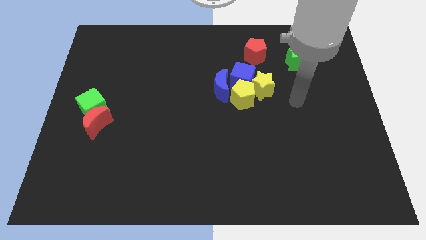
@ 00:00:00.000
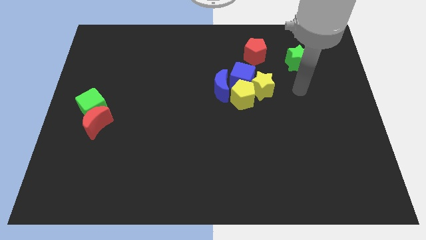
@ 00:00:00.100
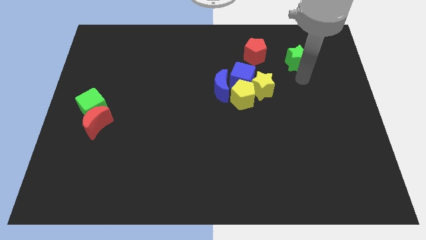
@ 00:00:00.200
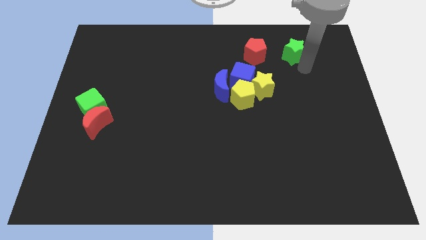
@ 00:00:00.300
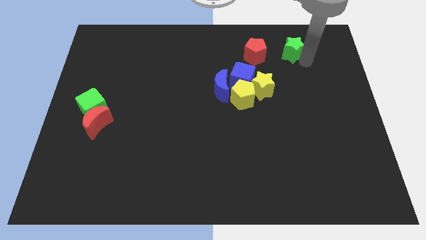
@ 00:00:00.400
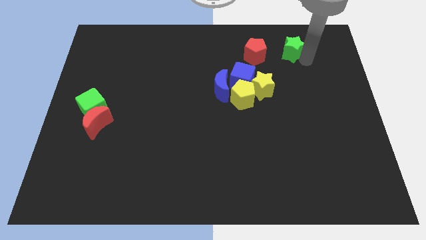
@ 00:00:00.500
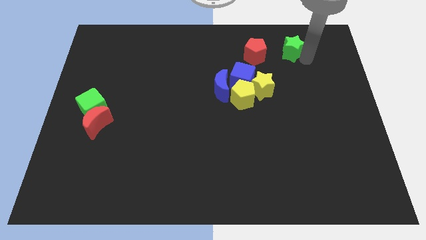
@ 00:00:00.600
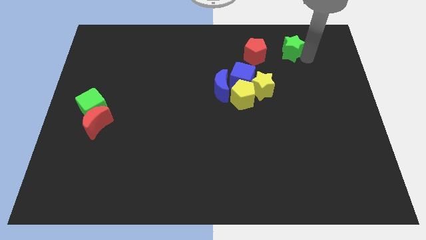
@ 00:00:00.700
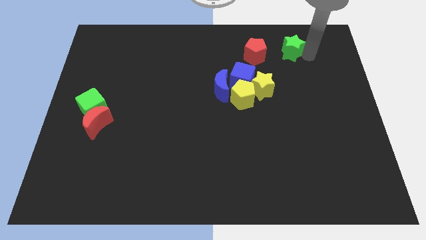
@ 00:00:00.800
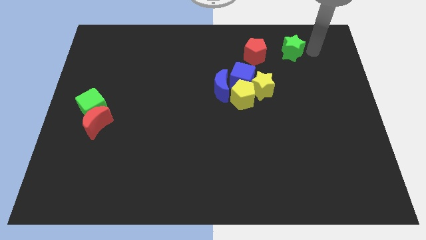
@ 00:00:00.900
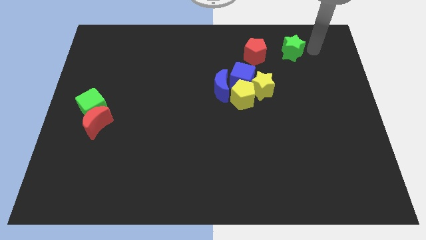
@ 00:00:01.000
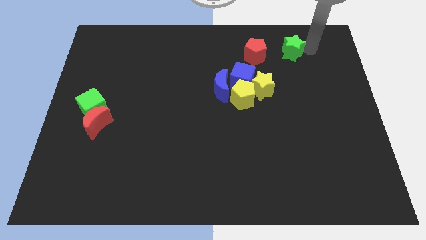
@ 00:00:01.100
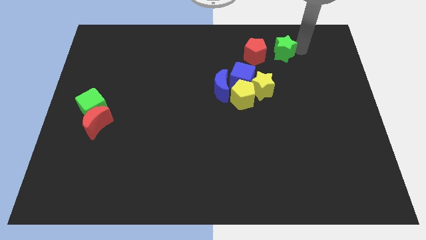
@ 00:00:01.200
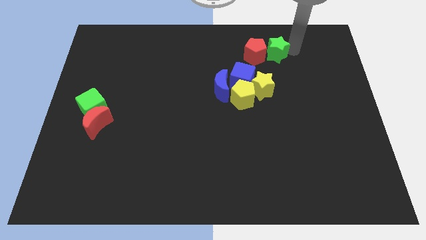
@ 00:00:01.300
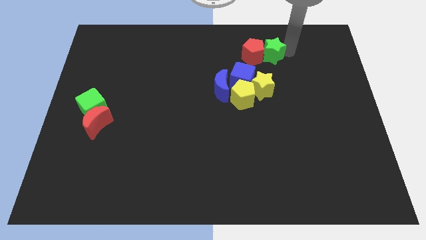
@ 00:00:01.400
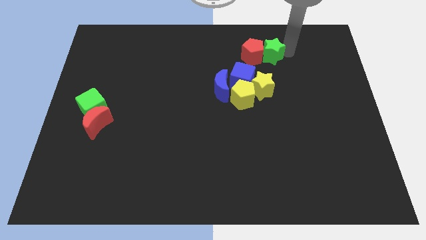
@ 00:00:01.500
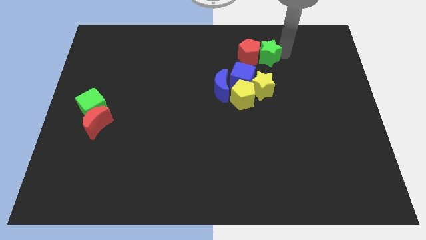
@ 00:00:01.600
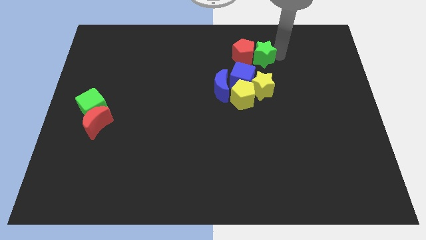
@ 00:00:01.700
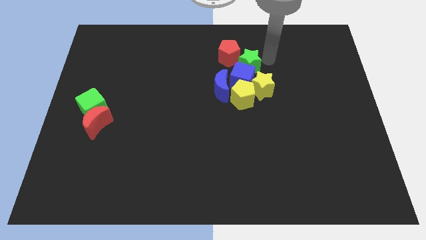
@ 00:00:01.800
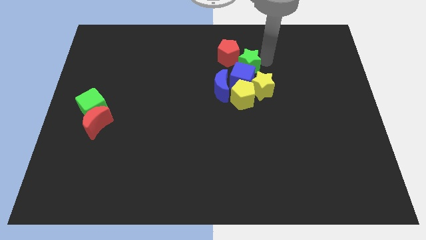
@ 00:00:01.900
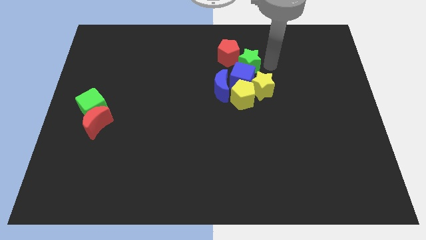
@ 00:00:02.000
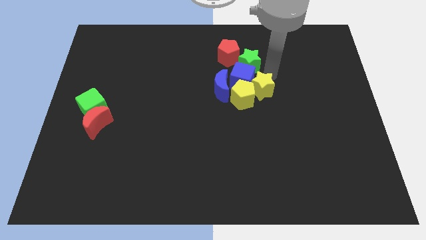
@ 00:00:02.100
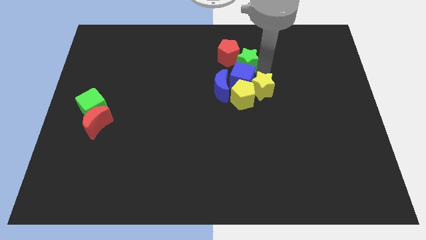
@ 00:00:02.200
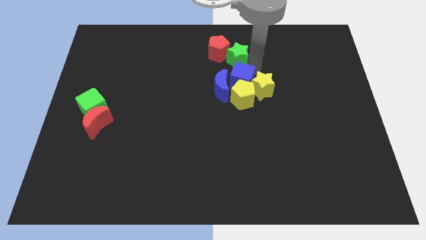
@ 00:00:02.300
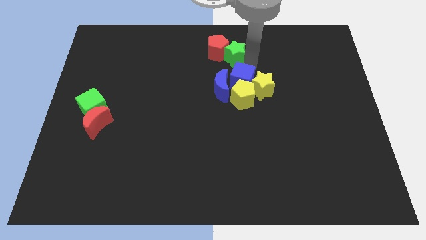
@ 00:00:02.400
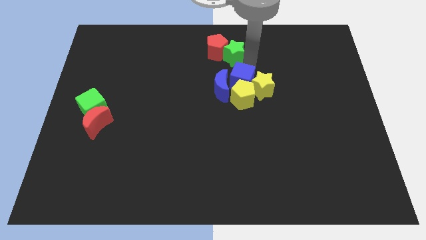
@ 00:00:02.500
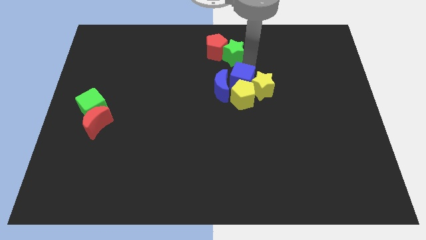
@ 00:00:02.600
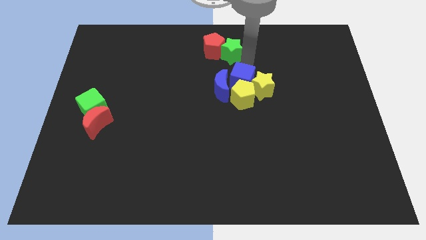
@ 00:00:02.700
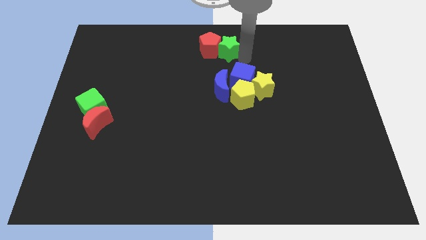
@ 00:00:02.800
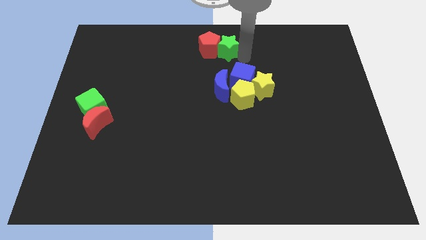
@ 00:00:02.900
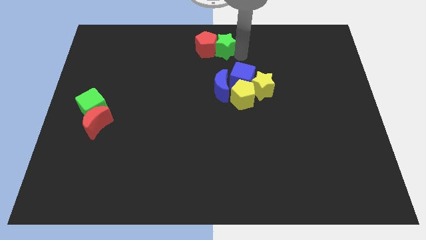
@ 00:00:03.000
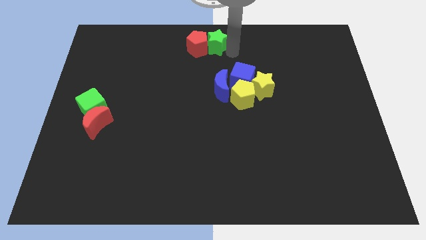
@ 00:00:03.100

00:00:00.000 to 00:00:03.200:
move the green star and red pentagon towards the top center

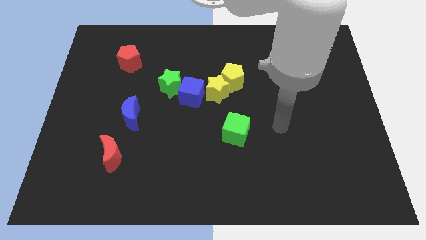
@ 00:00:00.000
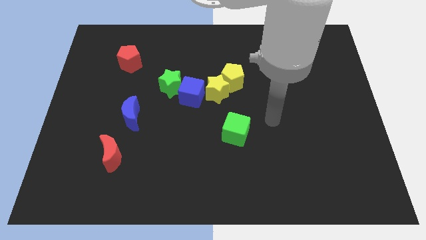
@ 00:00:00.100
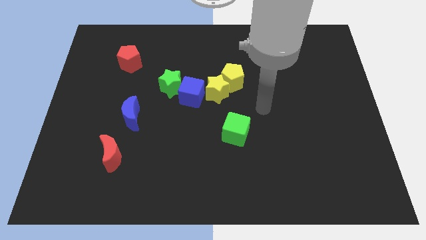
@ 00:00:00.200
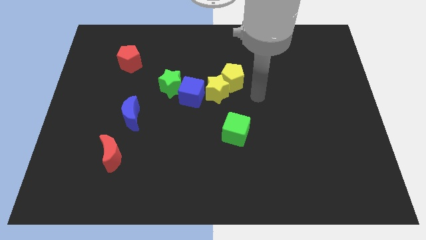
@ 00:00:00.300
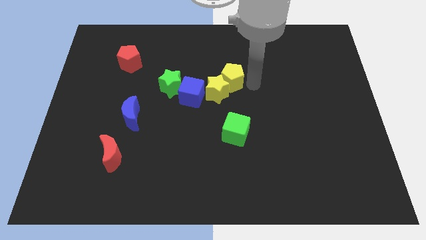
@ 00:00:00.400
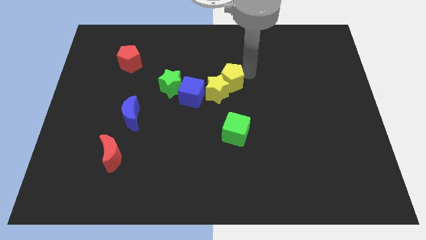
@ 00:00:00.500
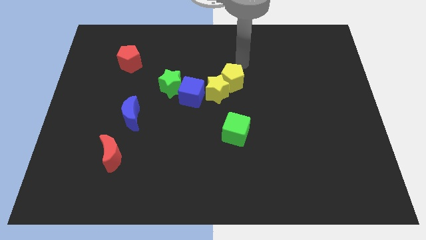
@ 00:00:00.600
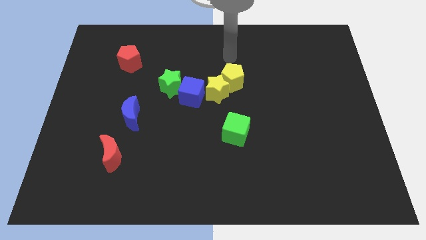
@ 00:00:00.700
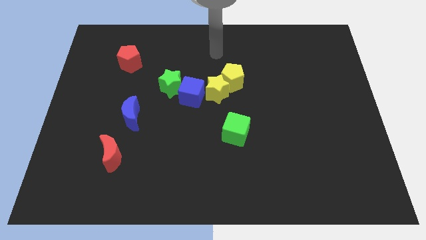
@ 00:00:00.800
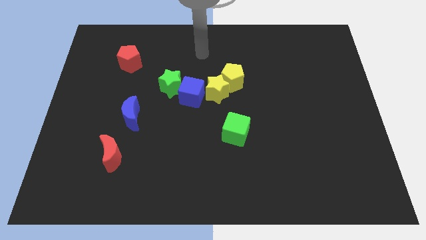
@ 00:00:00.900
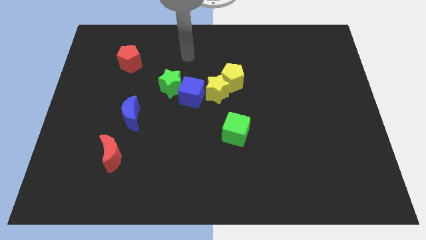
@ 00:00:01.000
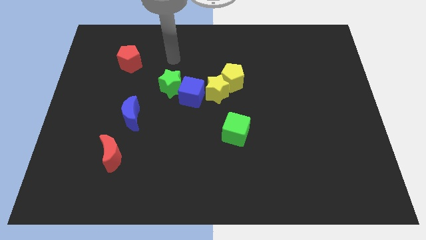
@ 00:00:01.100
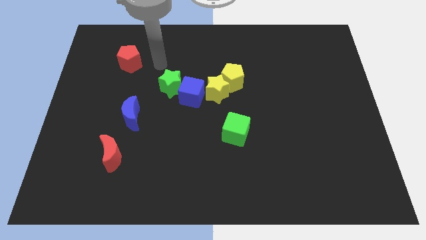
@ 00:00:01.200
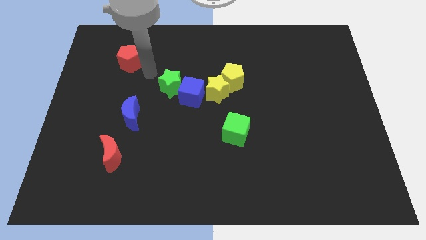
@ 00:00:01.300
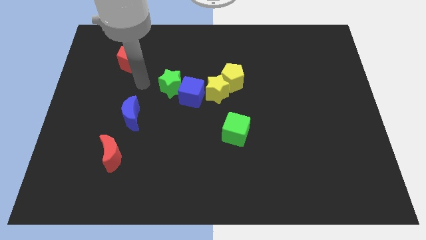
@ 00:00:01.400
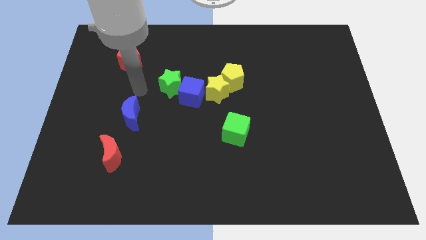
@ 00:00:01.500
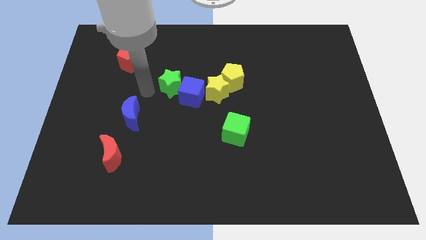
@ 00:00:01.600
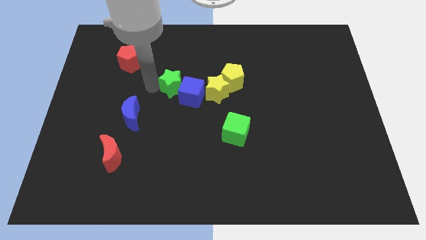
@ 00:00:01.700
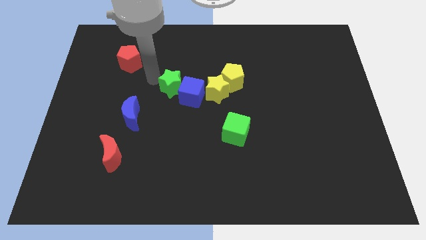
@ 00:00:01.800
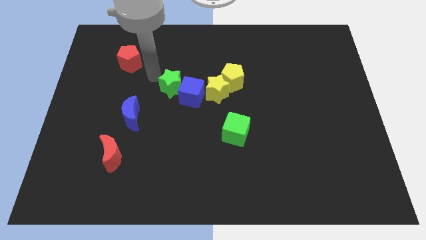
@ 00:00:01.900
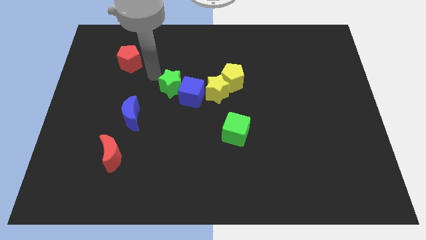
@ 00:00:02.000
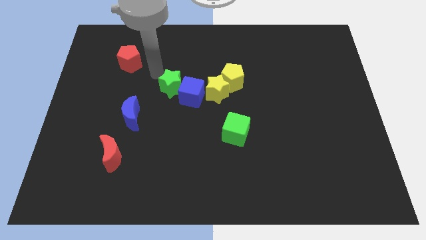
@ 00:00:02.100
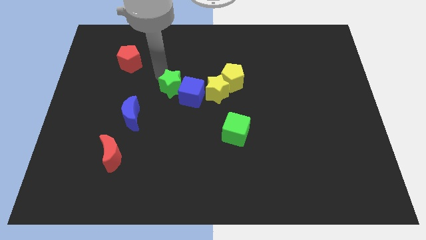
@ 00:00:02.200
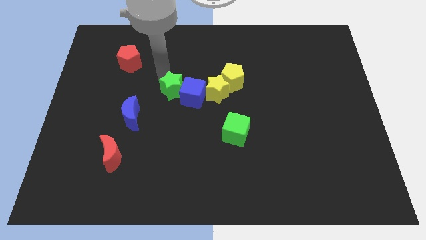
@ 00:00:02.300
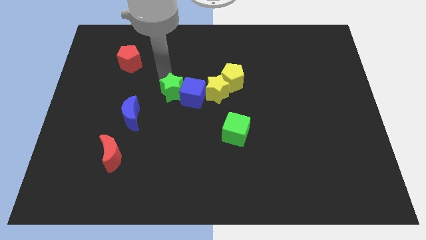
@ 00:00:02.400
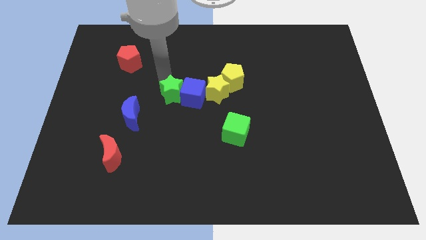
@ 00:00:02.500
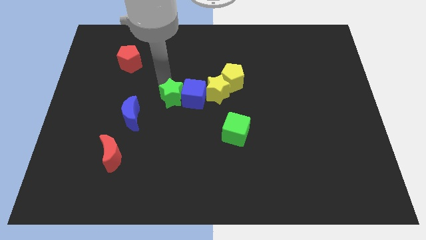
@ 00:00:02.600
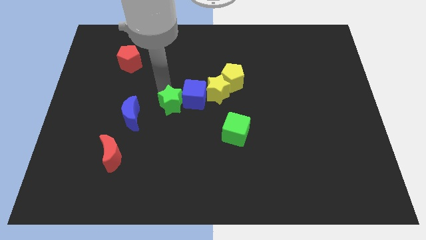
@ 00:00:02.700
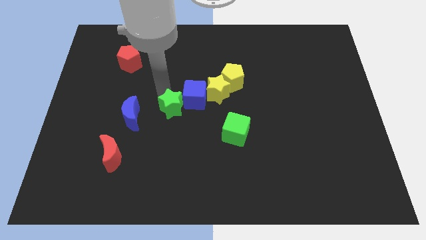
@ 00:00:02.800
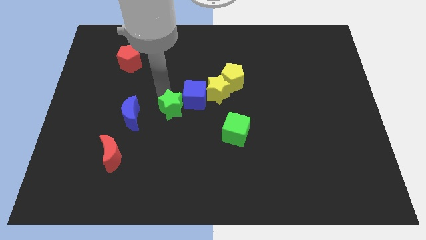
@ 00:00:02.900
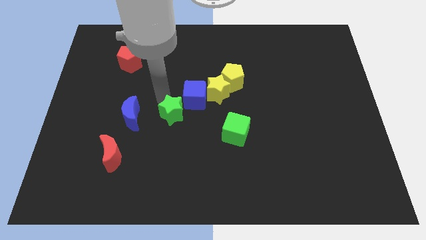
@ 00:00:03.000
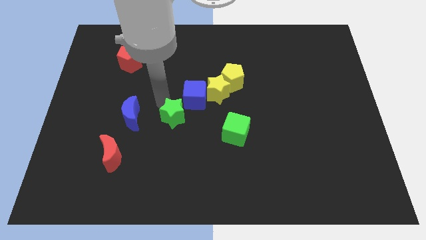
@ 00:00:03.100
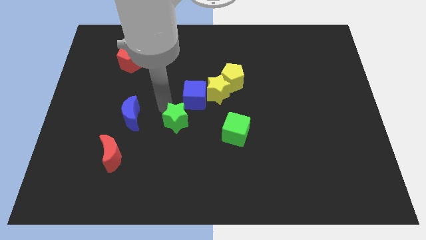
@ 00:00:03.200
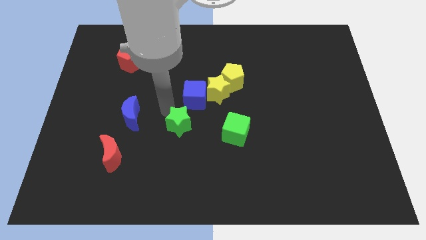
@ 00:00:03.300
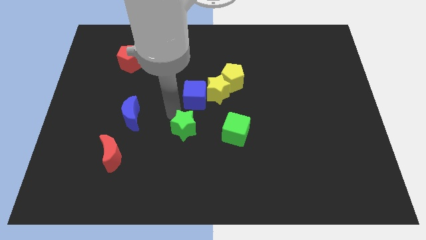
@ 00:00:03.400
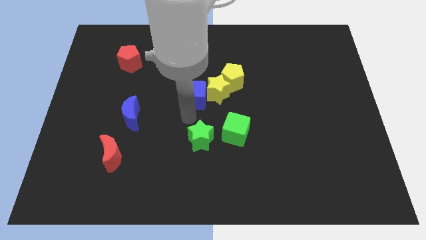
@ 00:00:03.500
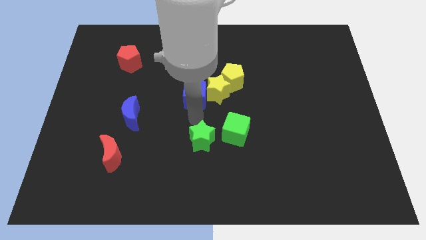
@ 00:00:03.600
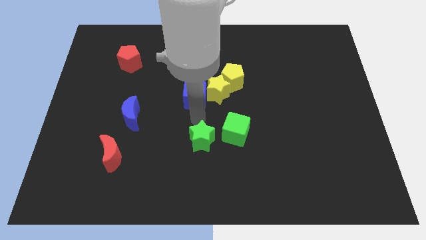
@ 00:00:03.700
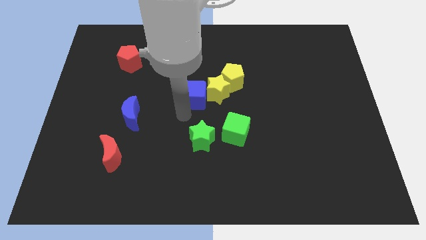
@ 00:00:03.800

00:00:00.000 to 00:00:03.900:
separate the green star from the group of blocks

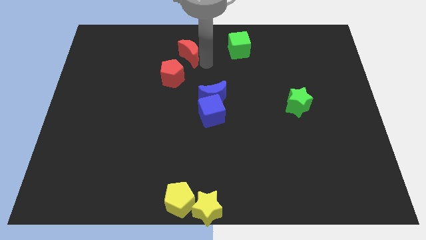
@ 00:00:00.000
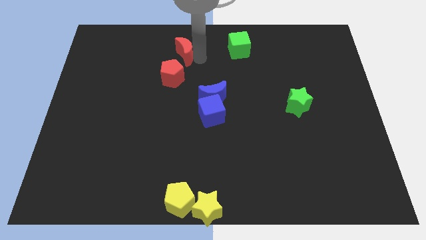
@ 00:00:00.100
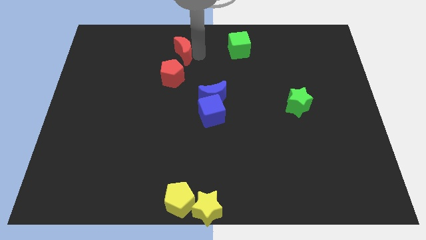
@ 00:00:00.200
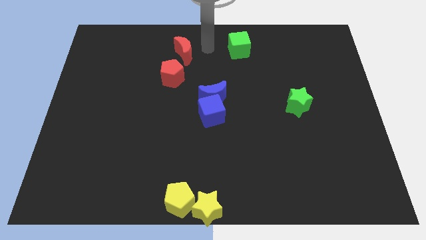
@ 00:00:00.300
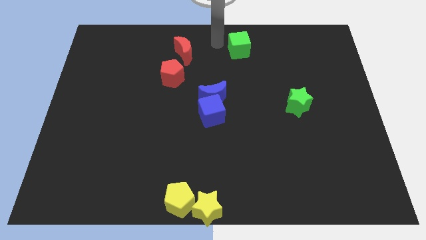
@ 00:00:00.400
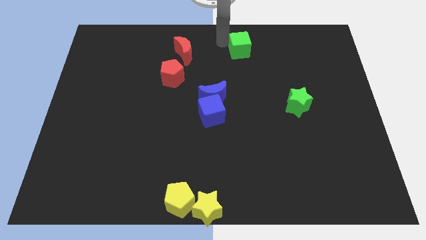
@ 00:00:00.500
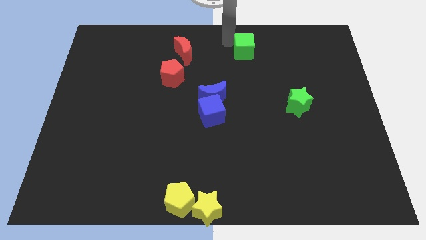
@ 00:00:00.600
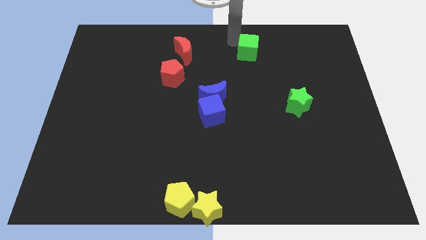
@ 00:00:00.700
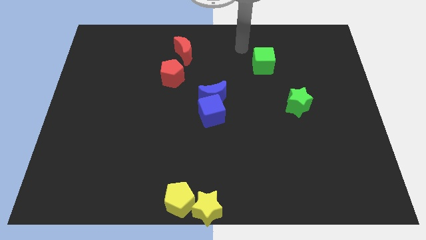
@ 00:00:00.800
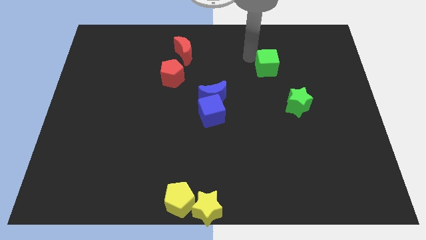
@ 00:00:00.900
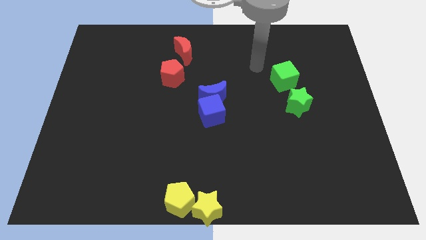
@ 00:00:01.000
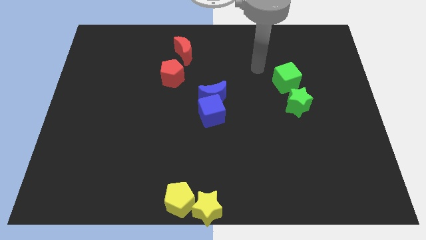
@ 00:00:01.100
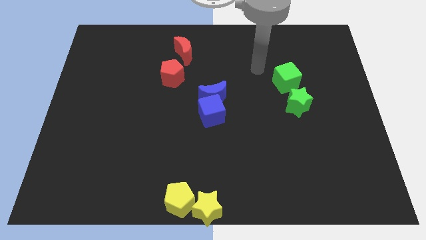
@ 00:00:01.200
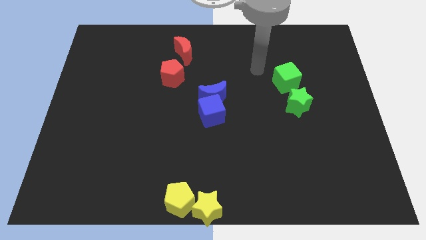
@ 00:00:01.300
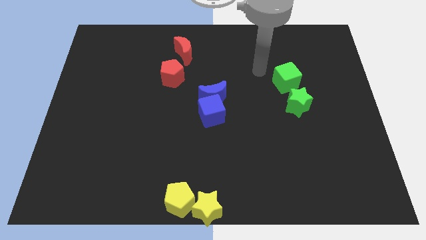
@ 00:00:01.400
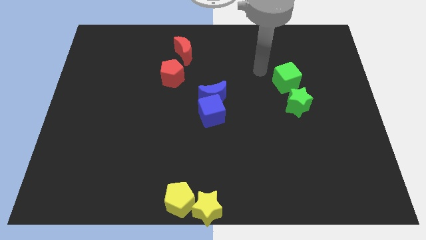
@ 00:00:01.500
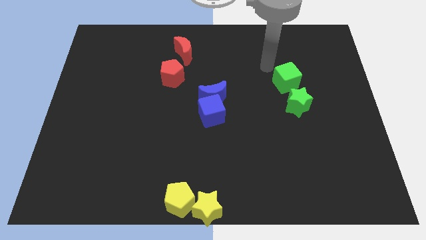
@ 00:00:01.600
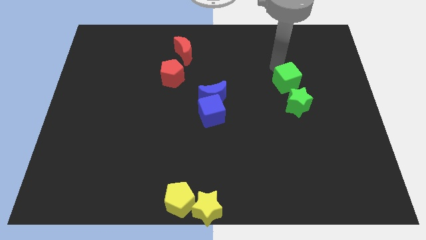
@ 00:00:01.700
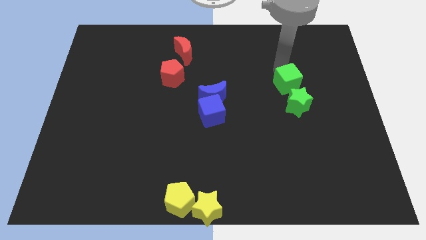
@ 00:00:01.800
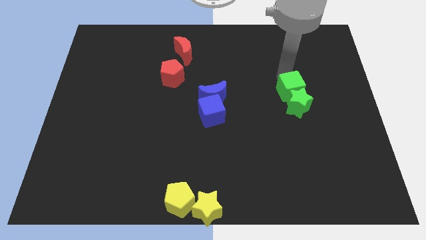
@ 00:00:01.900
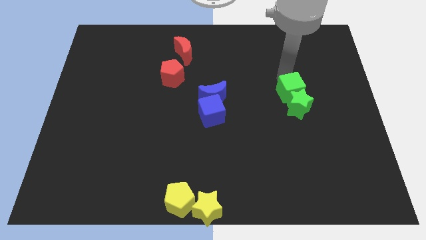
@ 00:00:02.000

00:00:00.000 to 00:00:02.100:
put the green cube into the green star
